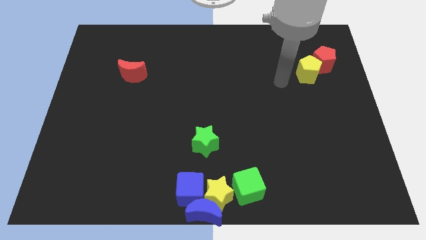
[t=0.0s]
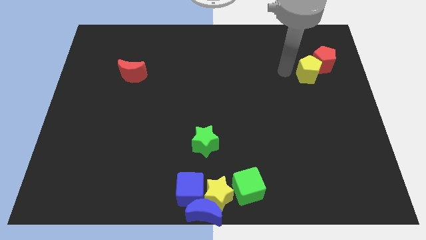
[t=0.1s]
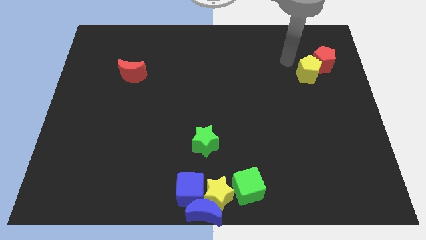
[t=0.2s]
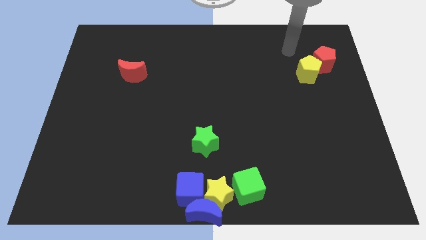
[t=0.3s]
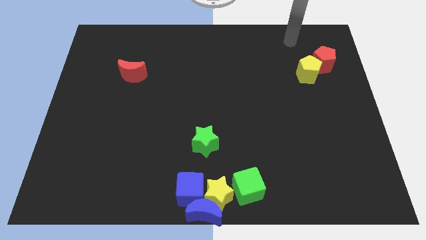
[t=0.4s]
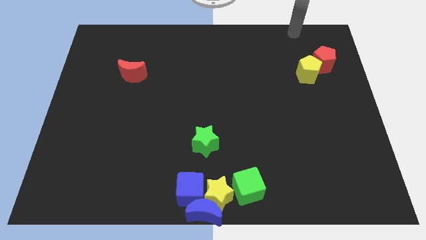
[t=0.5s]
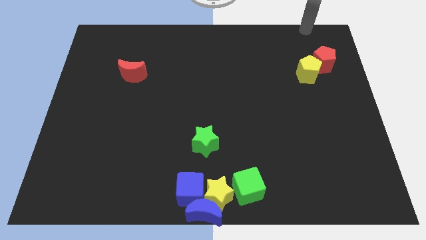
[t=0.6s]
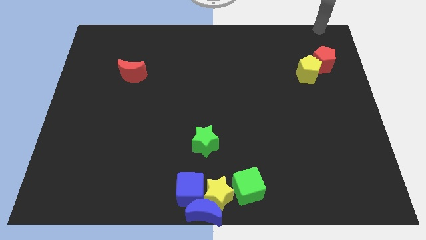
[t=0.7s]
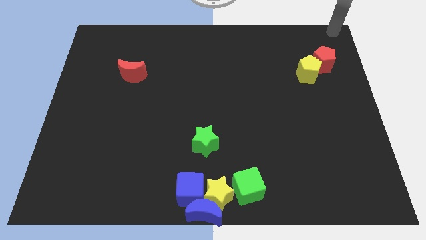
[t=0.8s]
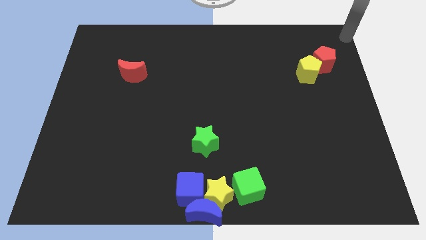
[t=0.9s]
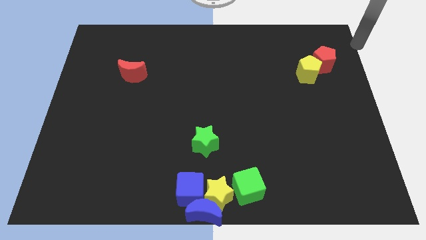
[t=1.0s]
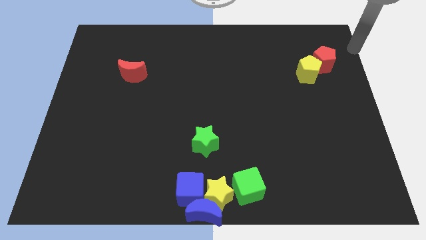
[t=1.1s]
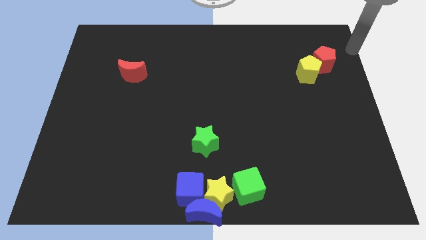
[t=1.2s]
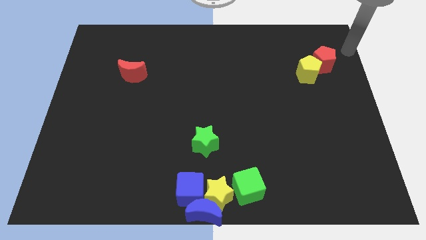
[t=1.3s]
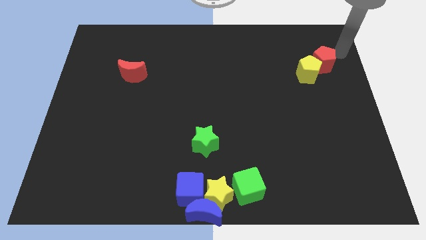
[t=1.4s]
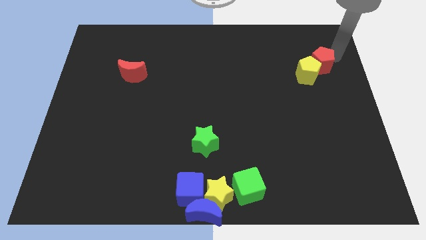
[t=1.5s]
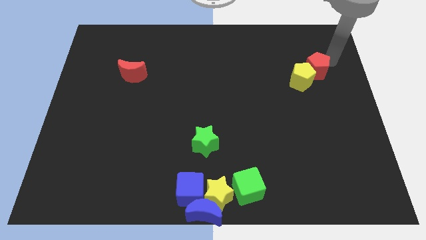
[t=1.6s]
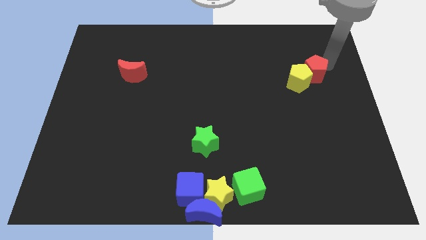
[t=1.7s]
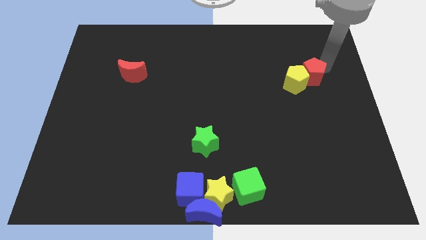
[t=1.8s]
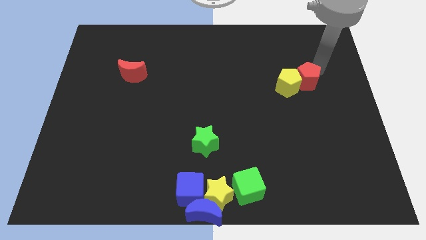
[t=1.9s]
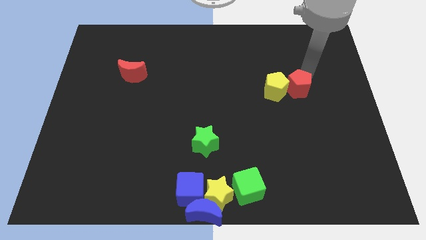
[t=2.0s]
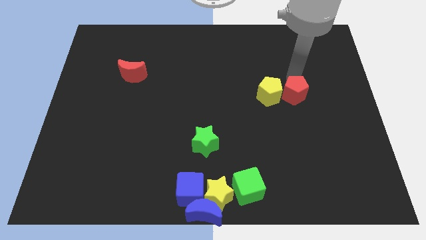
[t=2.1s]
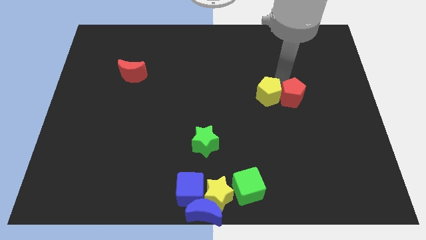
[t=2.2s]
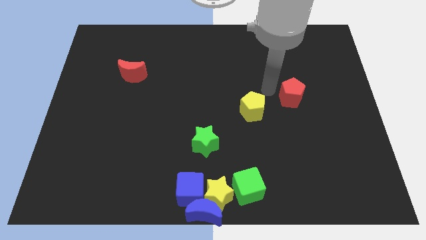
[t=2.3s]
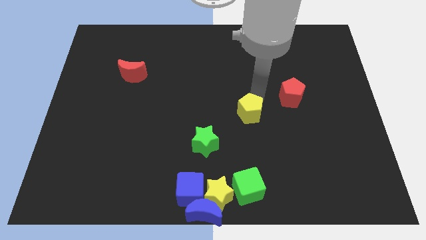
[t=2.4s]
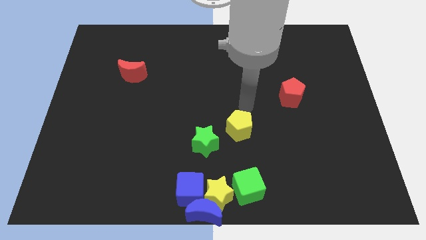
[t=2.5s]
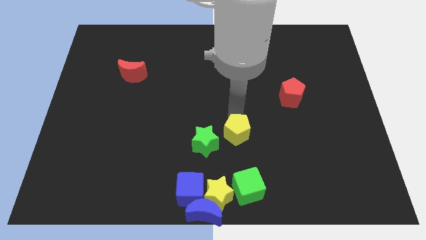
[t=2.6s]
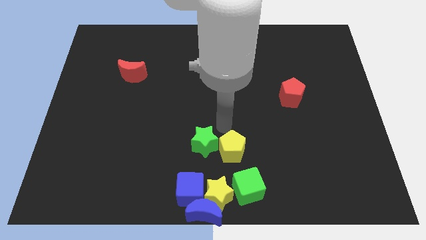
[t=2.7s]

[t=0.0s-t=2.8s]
push the yellow pentagon close to the green star

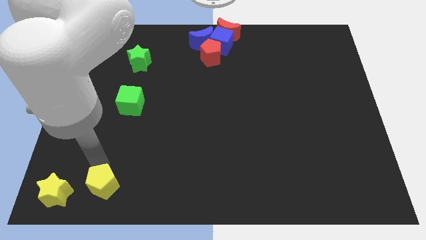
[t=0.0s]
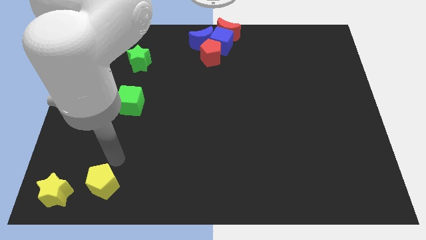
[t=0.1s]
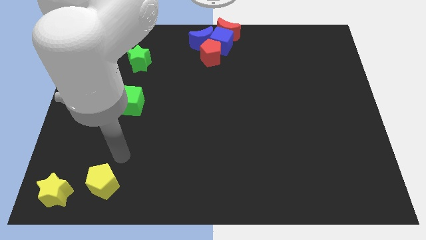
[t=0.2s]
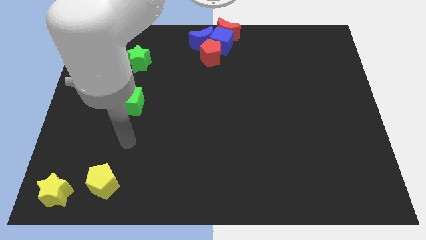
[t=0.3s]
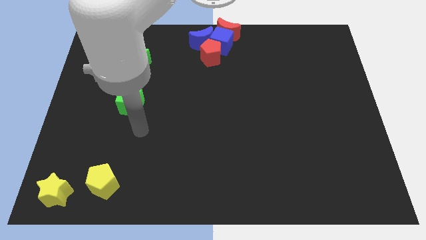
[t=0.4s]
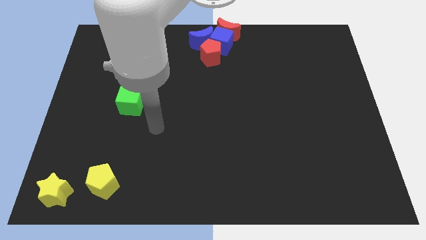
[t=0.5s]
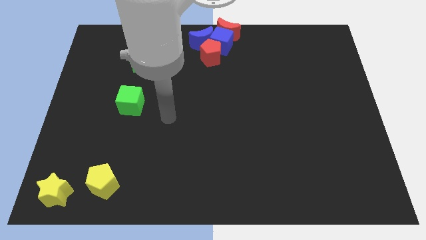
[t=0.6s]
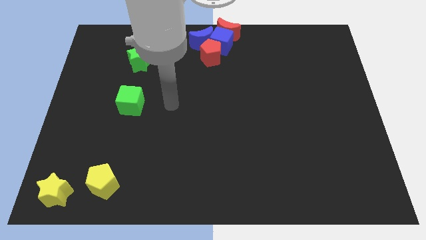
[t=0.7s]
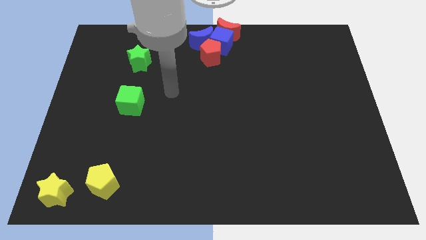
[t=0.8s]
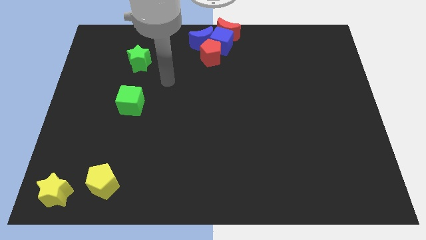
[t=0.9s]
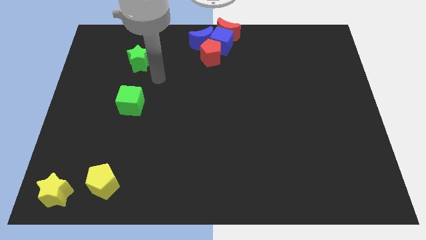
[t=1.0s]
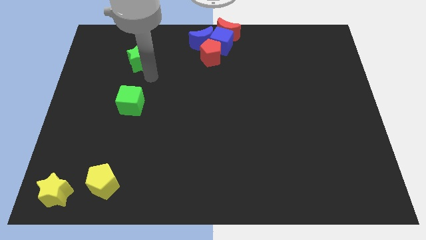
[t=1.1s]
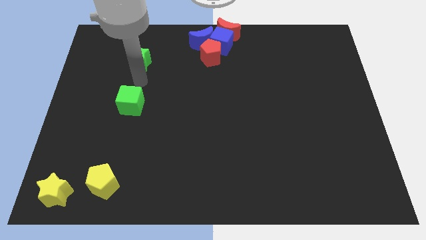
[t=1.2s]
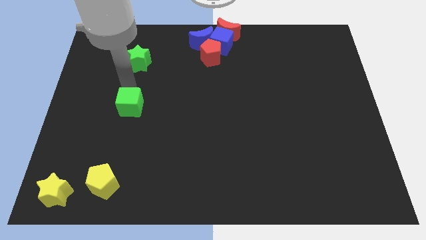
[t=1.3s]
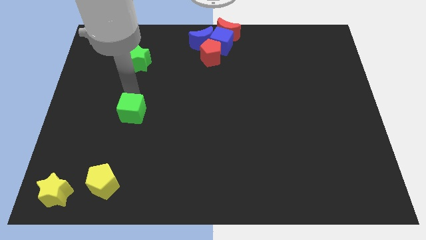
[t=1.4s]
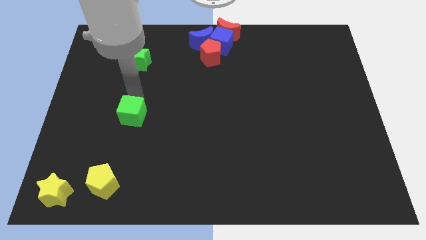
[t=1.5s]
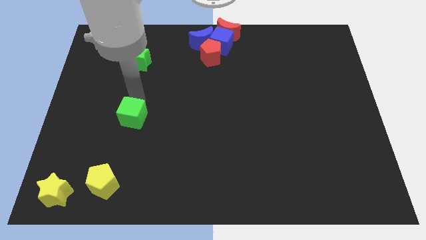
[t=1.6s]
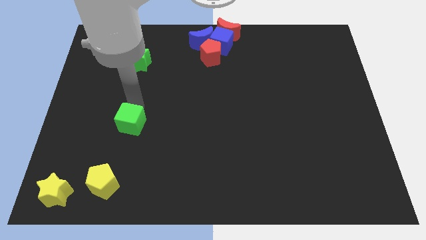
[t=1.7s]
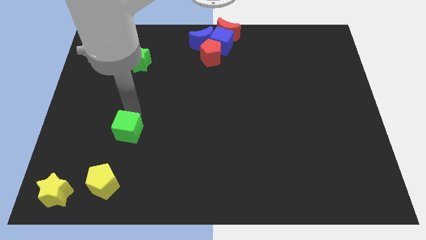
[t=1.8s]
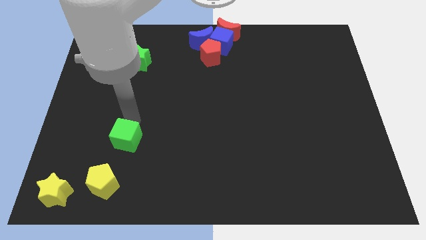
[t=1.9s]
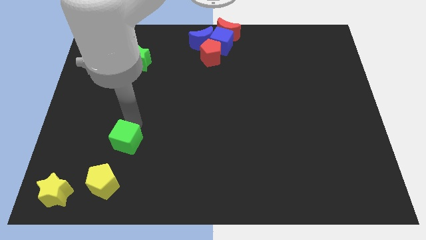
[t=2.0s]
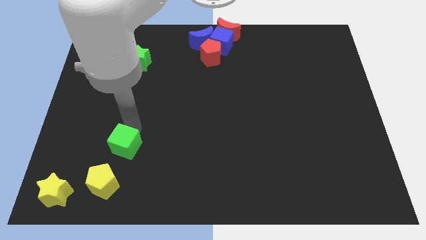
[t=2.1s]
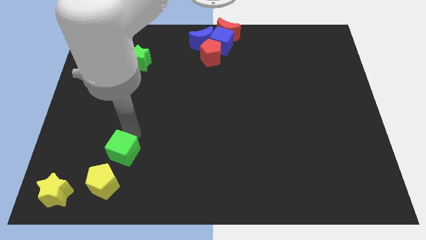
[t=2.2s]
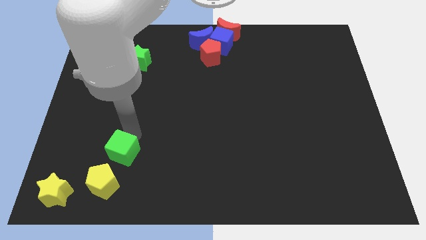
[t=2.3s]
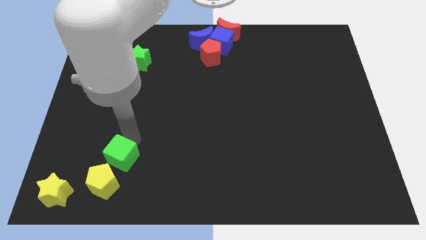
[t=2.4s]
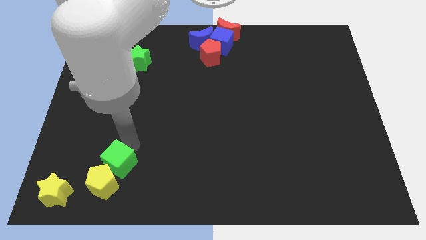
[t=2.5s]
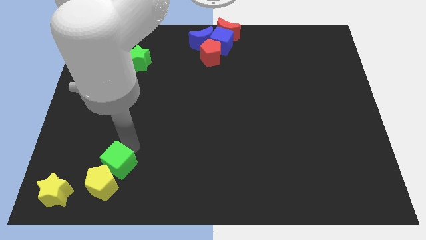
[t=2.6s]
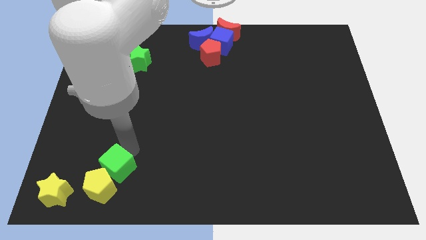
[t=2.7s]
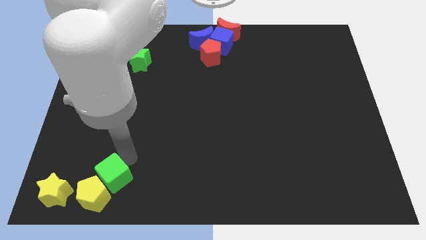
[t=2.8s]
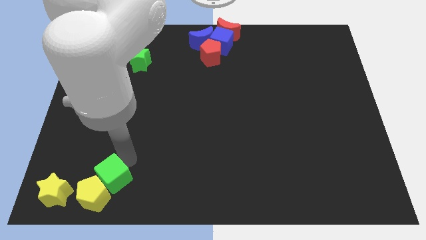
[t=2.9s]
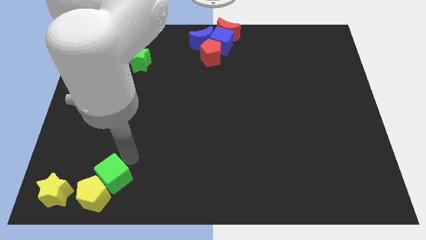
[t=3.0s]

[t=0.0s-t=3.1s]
bring the green cube to the top right side of the yellow pentagon

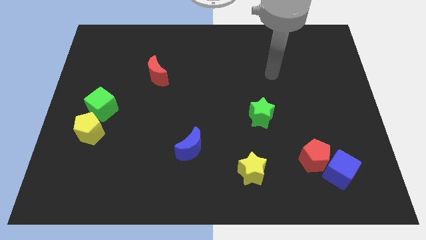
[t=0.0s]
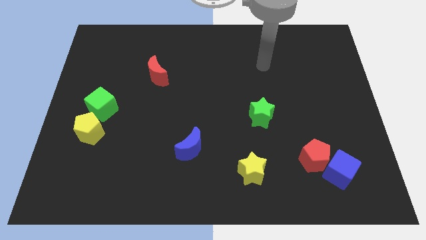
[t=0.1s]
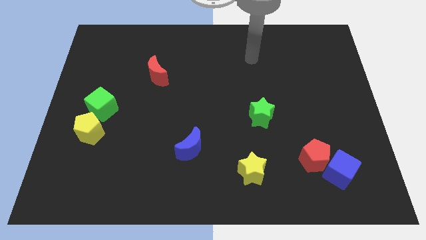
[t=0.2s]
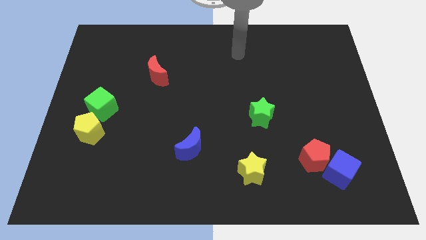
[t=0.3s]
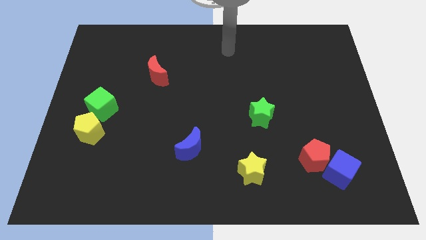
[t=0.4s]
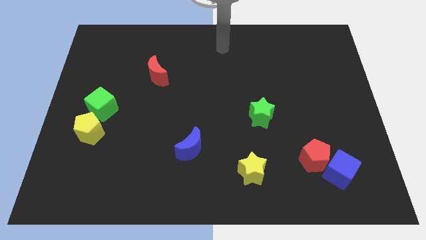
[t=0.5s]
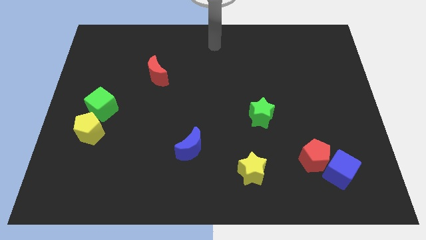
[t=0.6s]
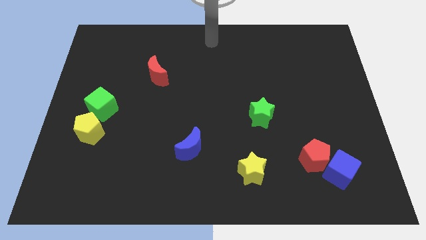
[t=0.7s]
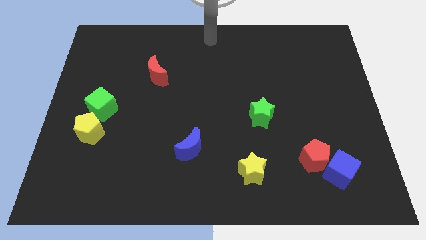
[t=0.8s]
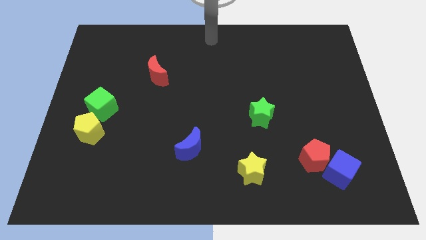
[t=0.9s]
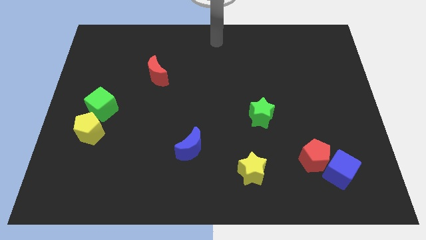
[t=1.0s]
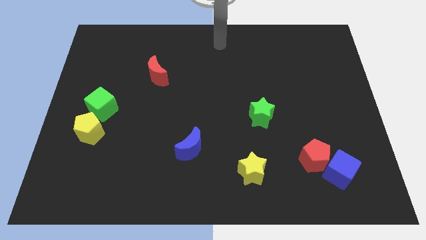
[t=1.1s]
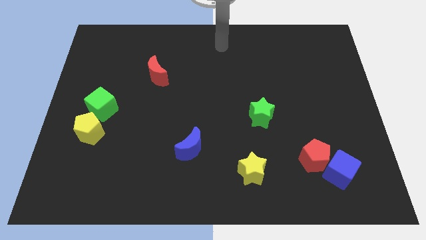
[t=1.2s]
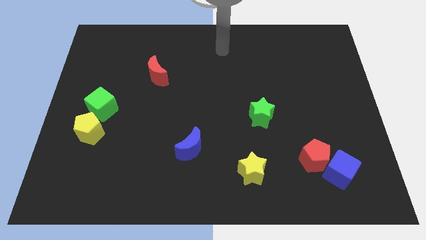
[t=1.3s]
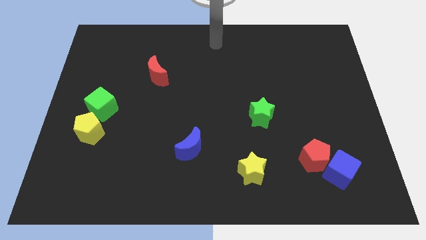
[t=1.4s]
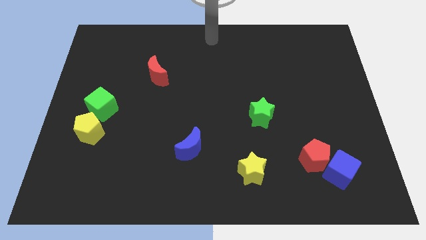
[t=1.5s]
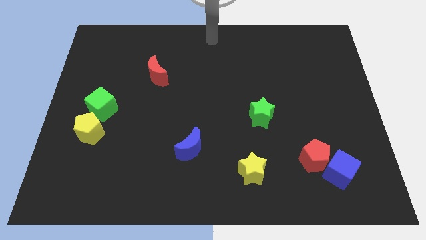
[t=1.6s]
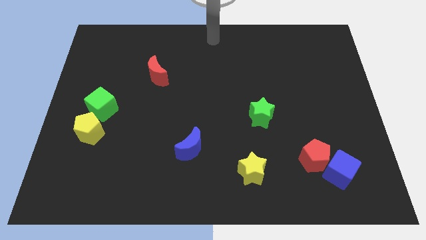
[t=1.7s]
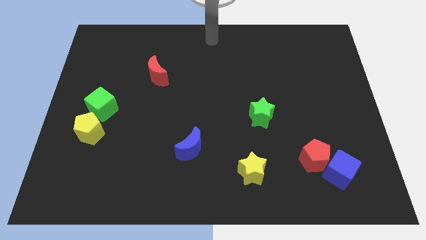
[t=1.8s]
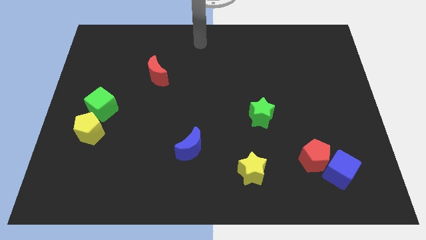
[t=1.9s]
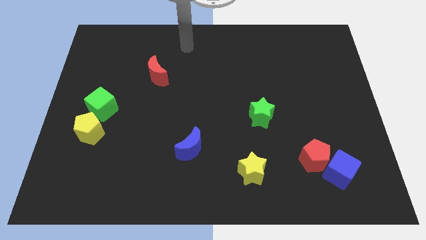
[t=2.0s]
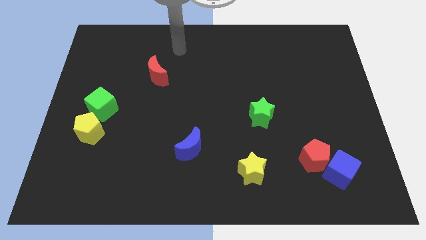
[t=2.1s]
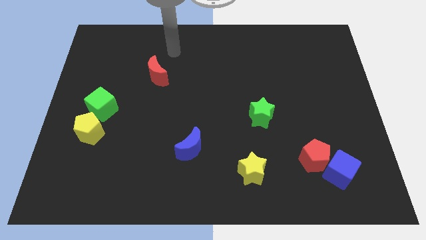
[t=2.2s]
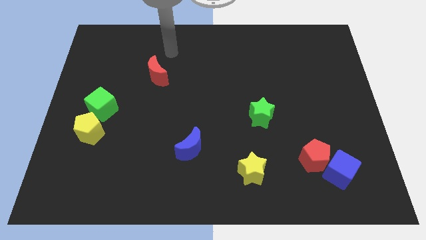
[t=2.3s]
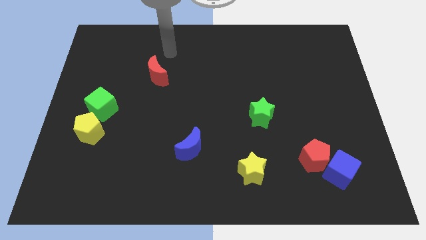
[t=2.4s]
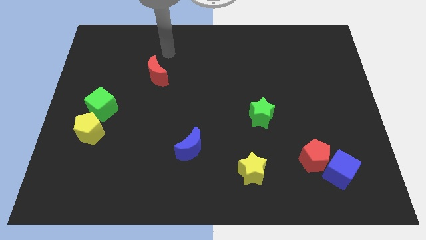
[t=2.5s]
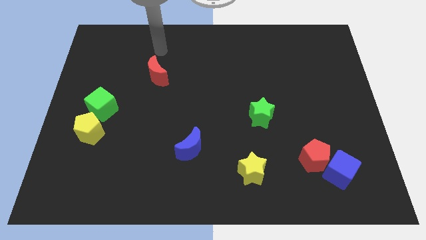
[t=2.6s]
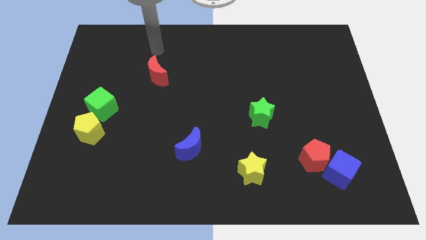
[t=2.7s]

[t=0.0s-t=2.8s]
point your hand at the top side of the crescent

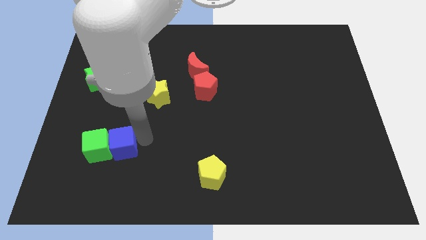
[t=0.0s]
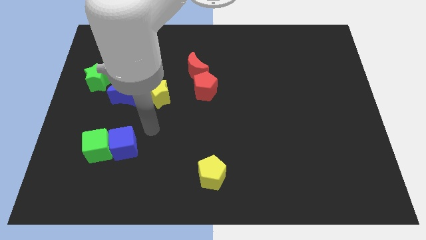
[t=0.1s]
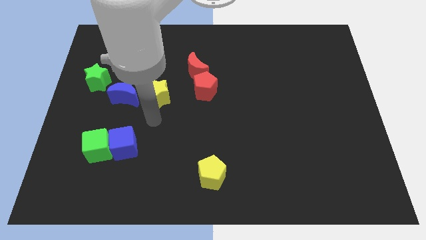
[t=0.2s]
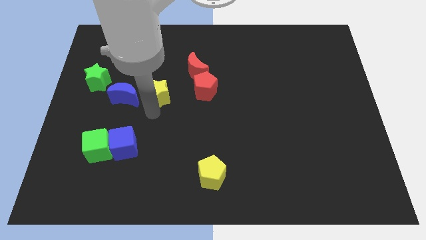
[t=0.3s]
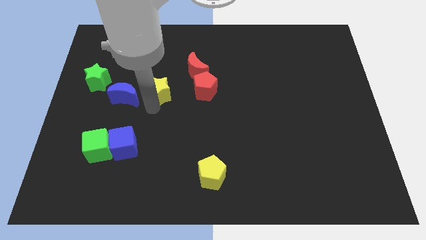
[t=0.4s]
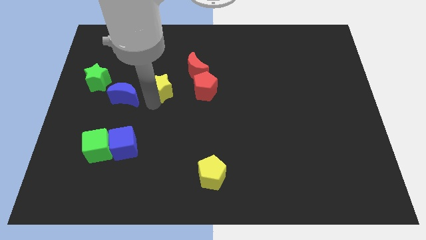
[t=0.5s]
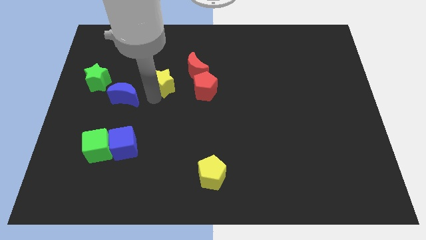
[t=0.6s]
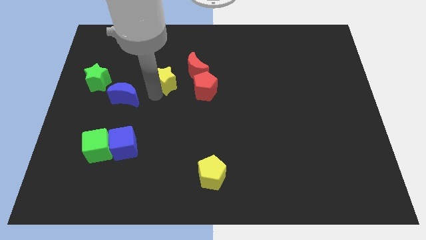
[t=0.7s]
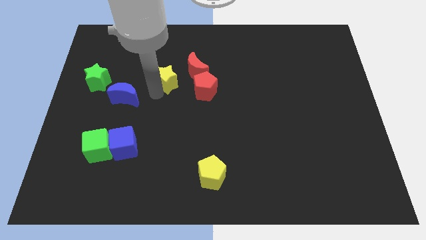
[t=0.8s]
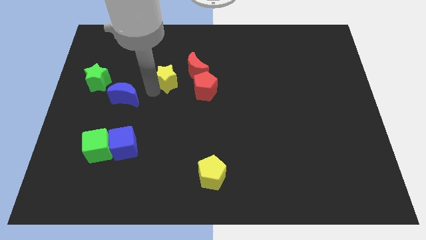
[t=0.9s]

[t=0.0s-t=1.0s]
push the yellow star upwards slightly
